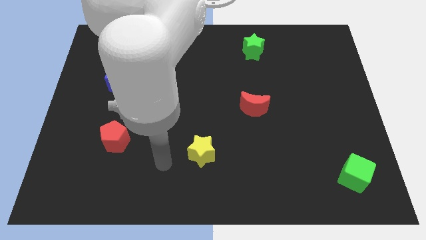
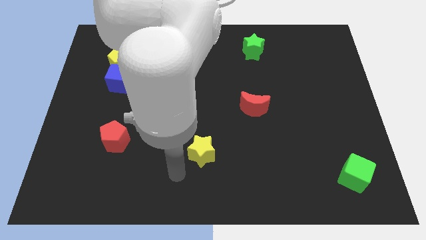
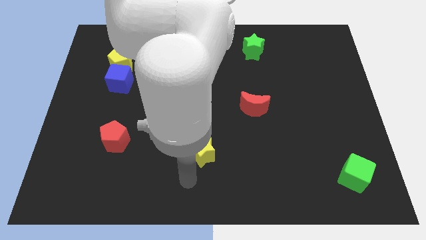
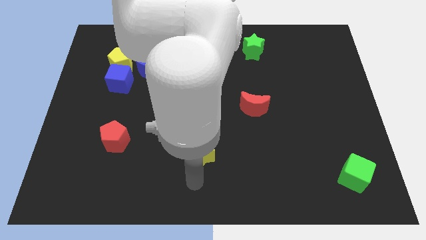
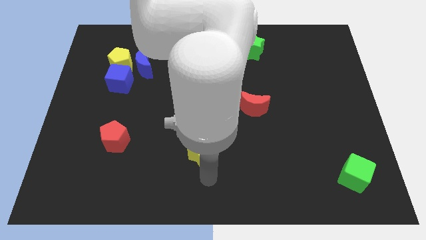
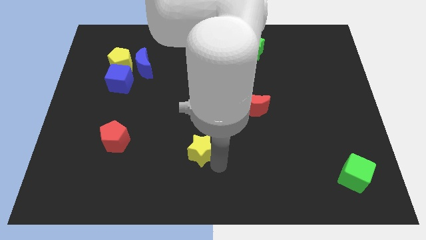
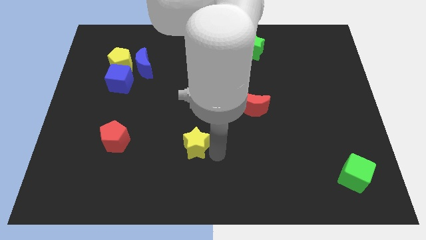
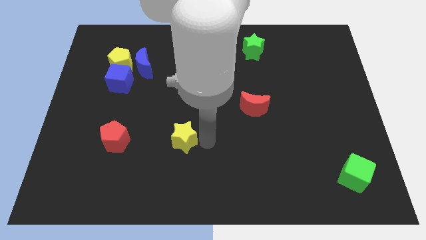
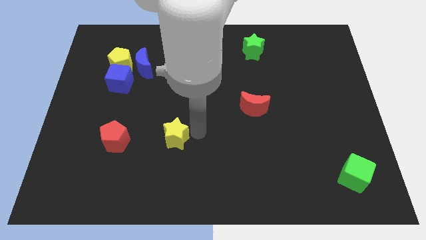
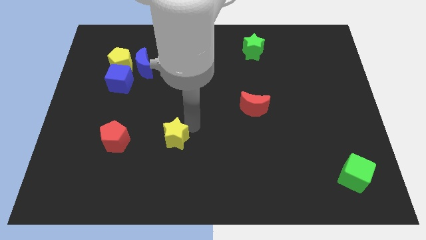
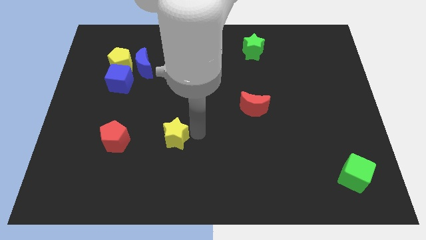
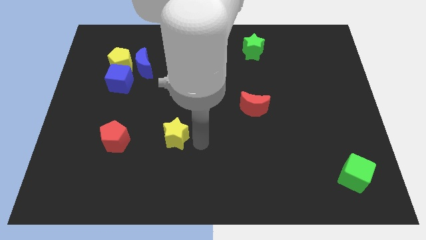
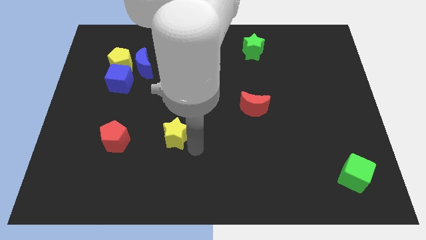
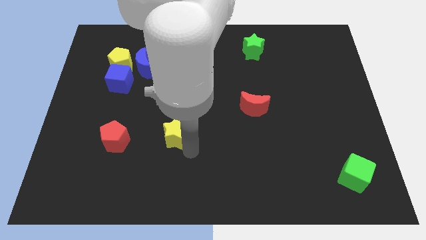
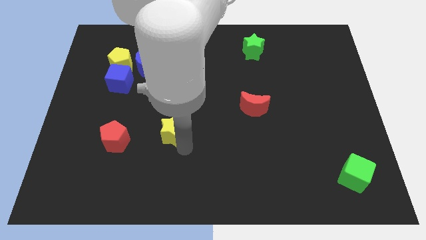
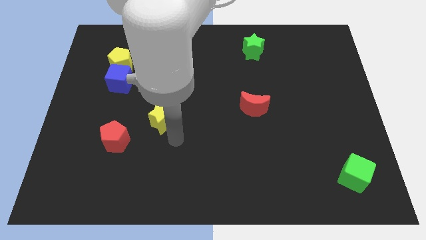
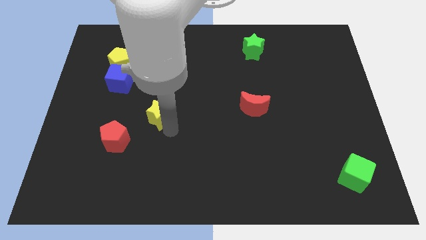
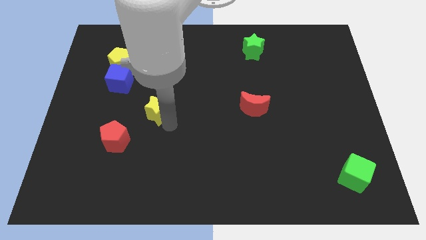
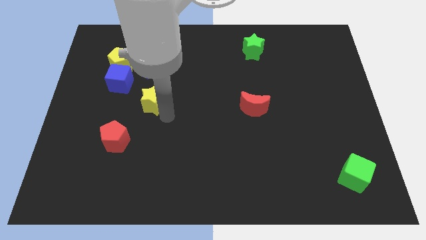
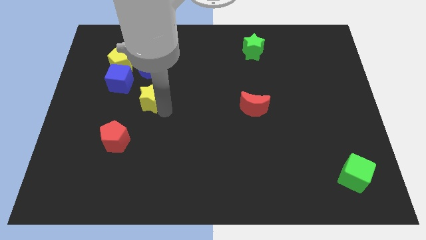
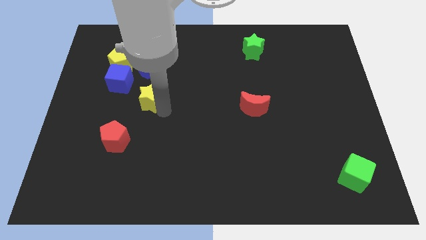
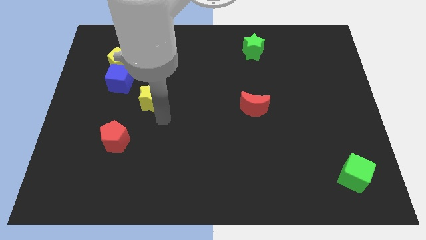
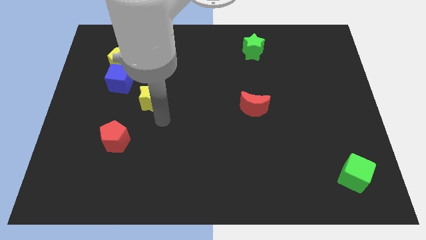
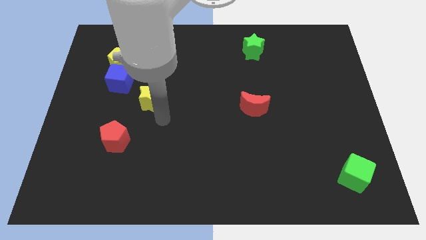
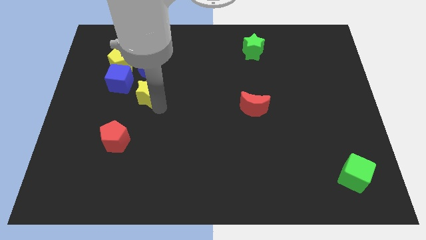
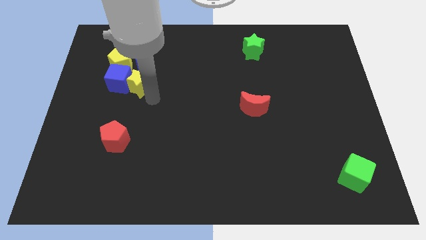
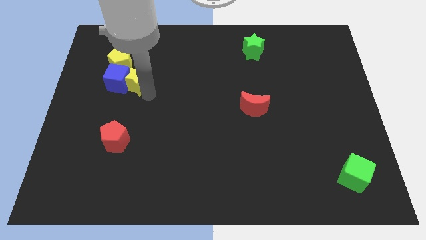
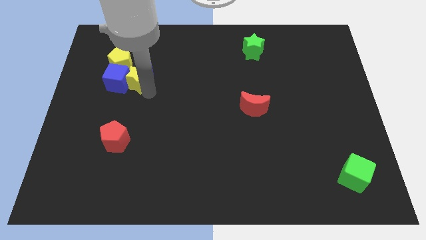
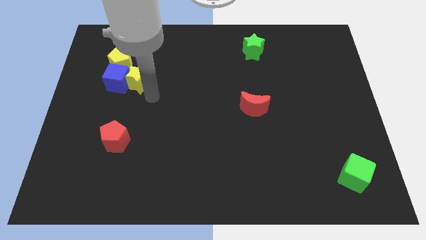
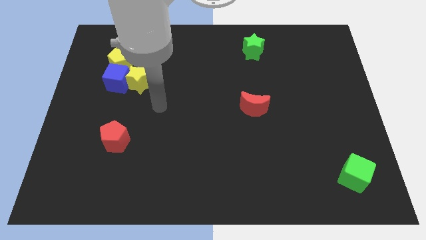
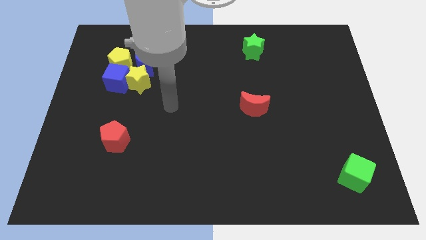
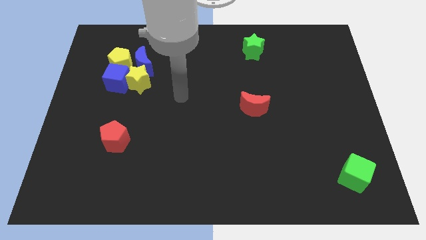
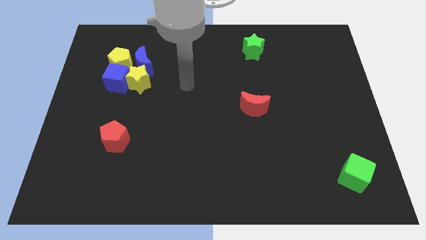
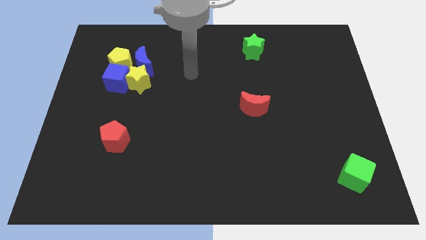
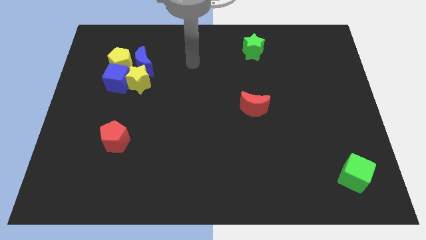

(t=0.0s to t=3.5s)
place the yellow star into blue cube

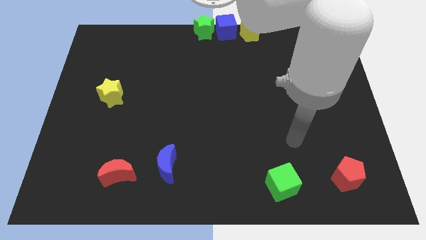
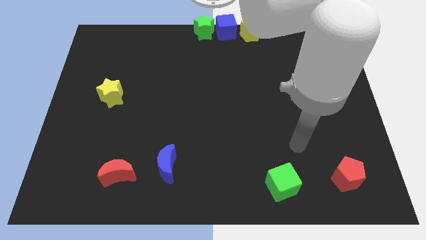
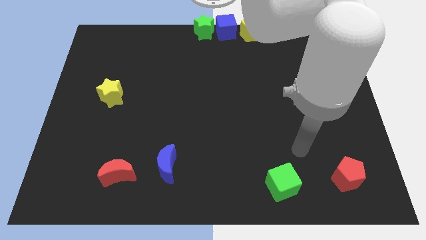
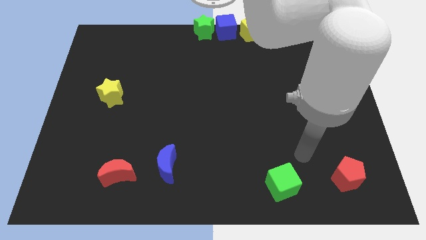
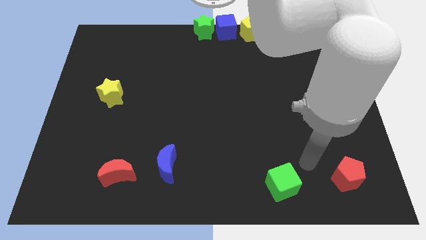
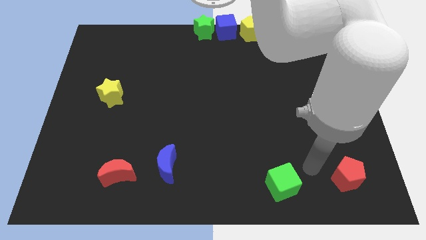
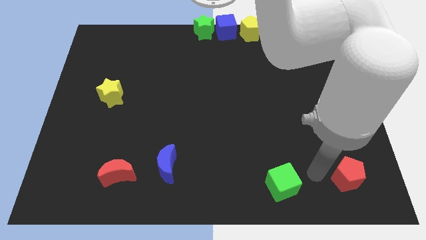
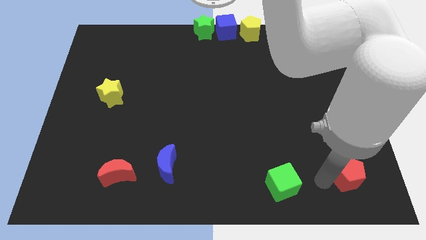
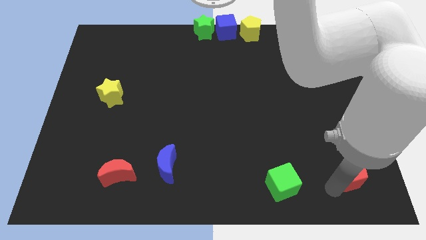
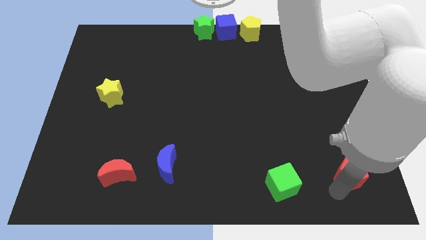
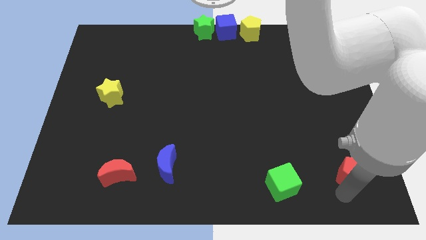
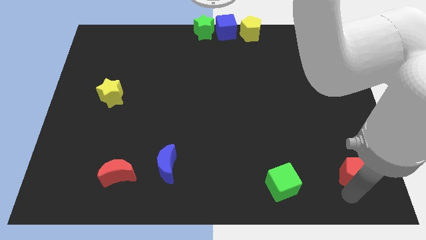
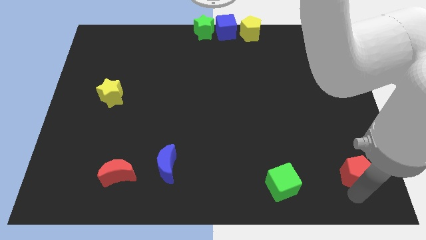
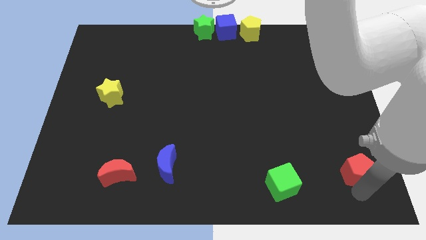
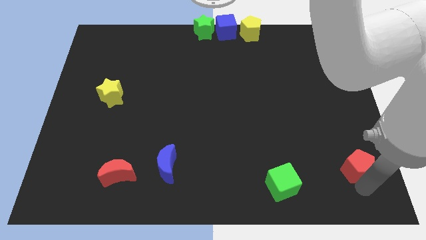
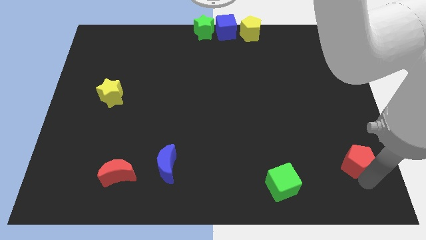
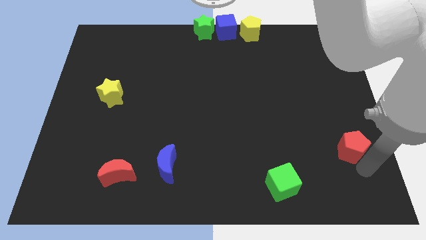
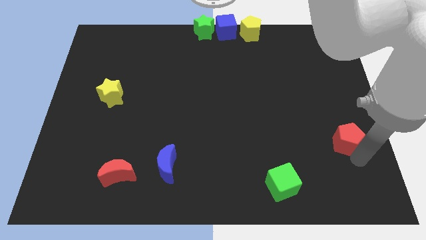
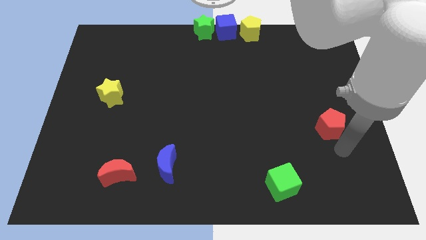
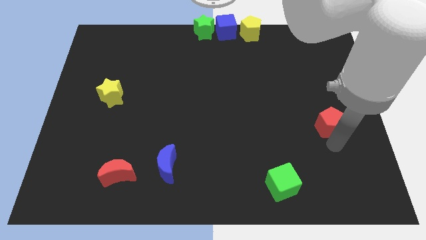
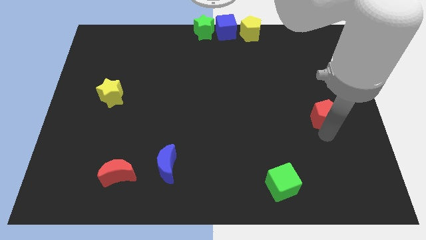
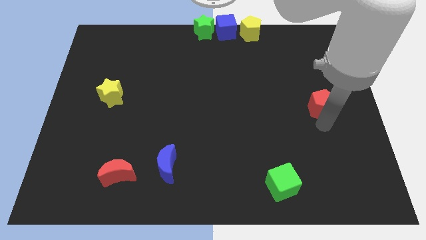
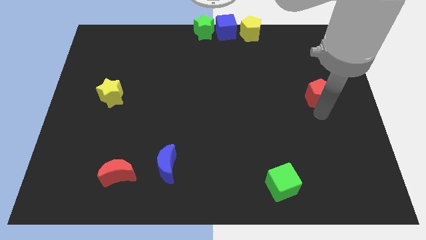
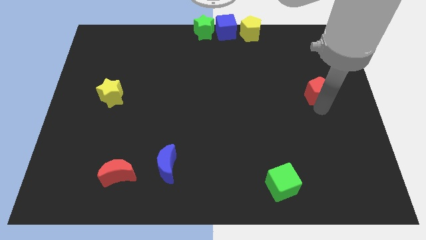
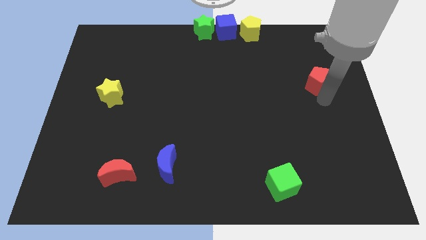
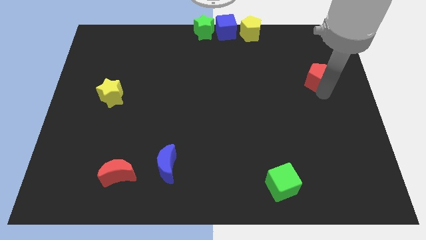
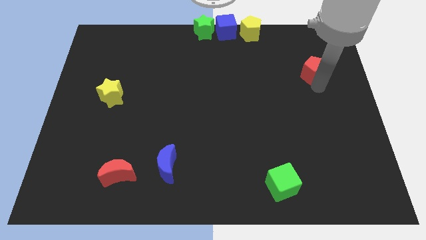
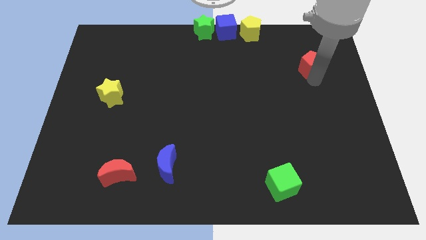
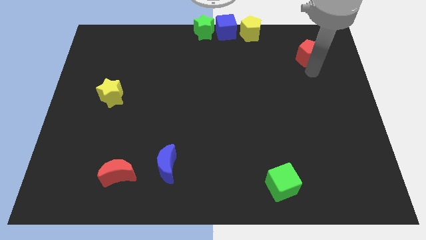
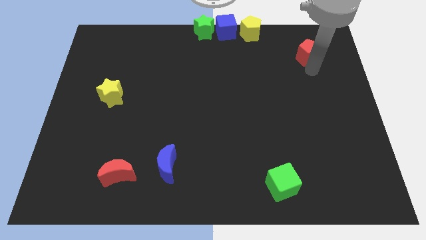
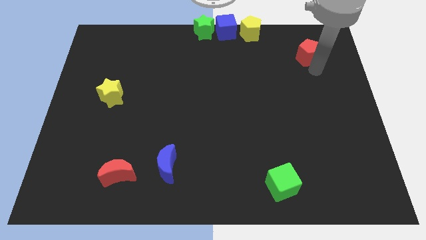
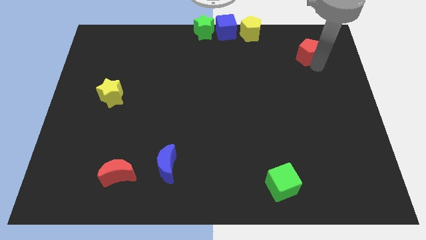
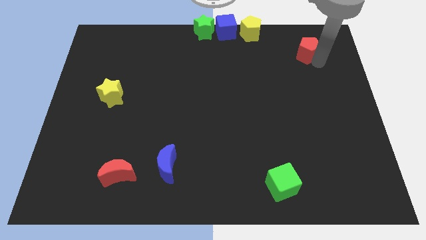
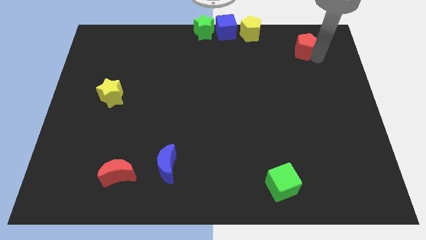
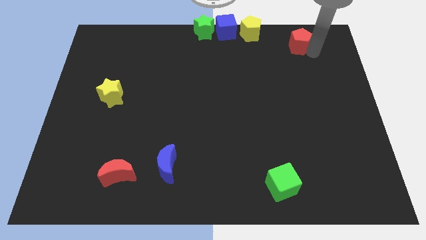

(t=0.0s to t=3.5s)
separate red pentagon from green cube

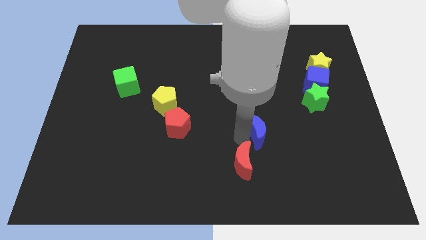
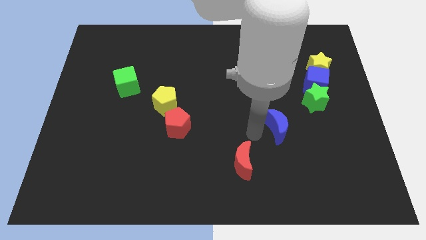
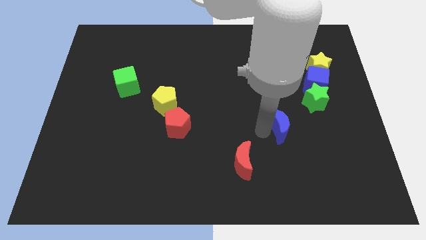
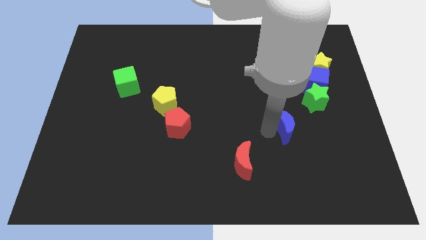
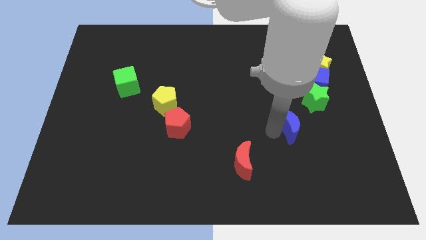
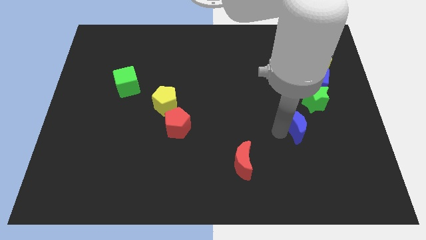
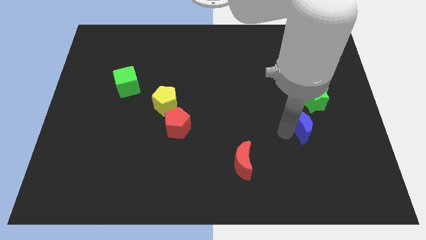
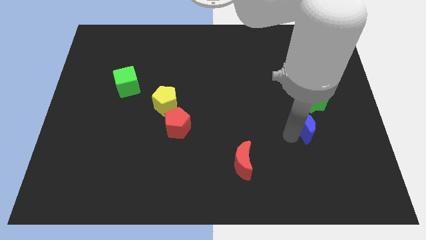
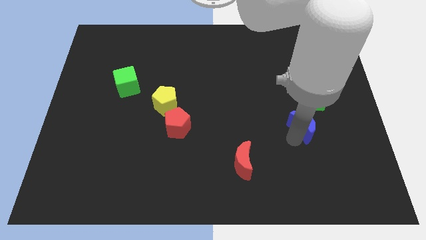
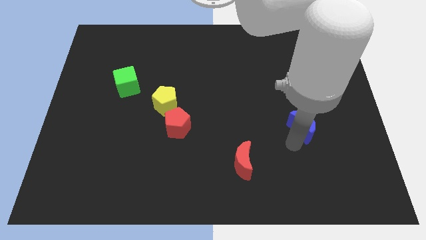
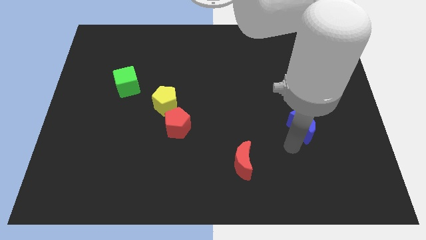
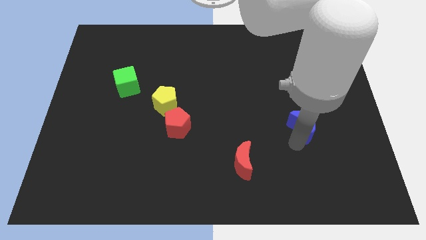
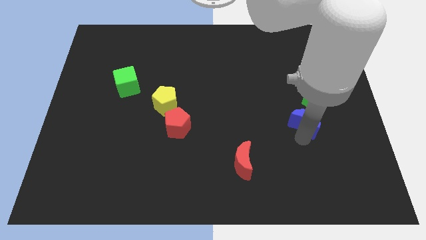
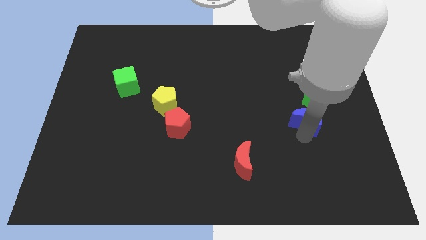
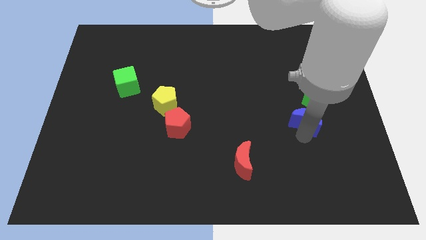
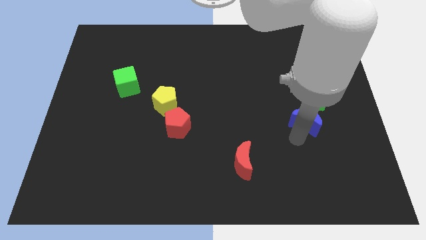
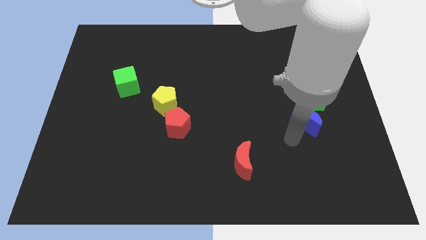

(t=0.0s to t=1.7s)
place the blue crescent close to the green star

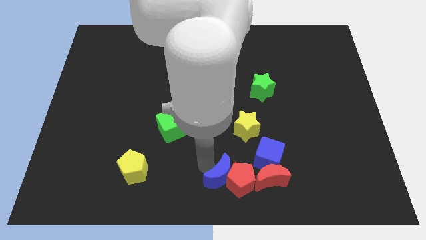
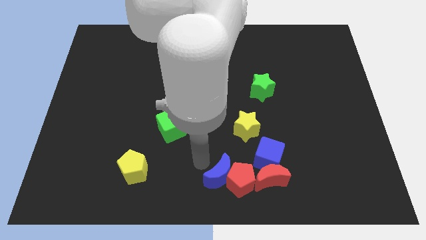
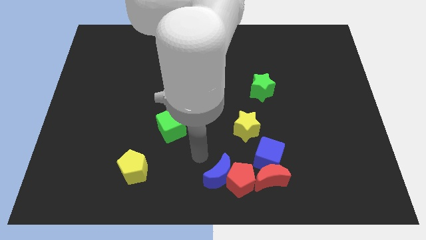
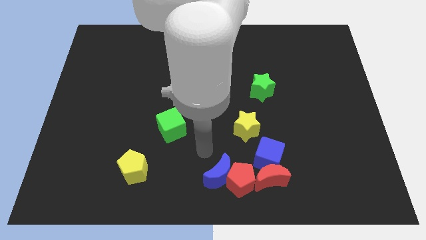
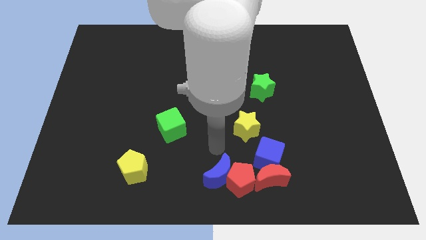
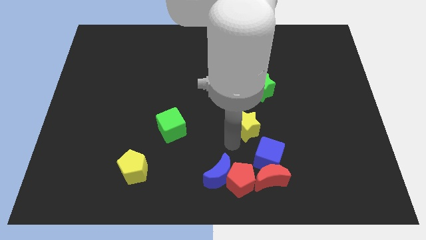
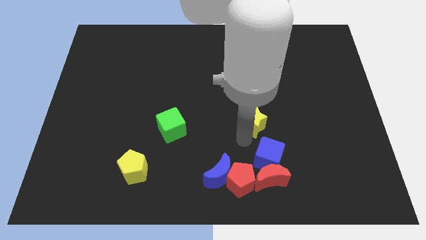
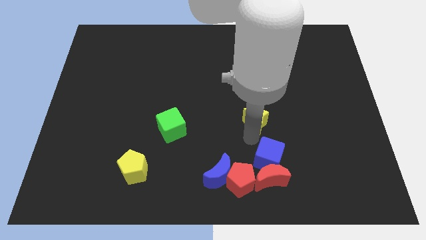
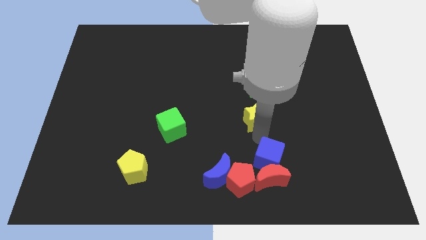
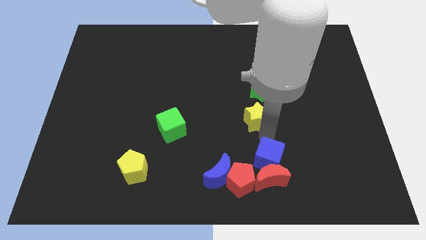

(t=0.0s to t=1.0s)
point your arm between yellow star and blue cube
